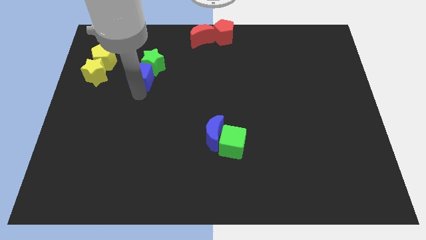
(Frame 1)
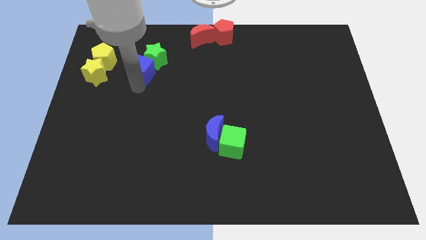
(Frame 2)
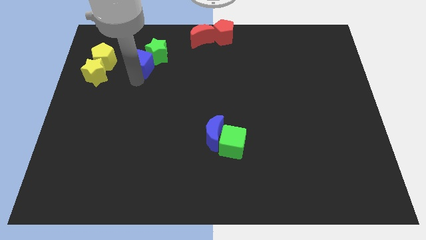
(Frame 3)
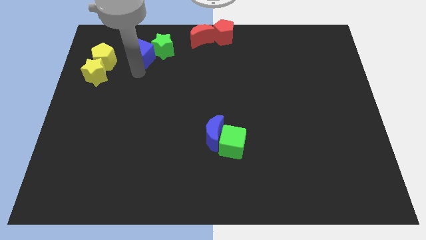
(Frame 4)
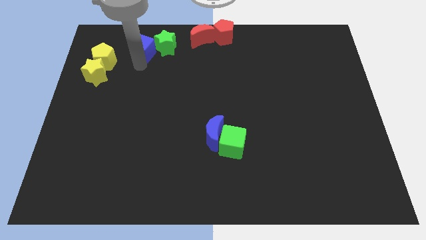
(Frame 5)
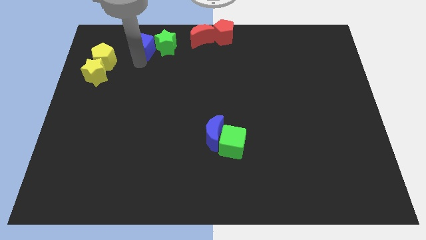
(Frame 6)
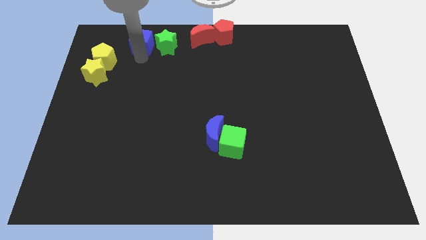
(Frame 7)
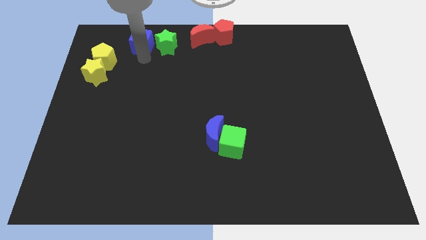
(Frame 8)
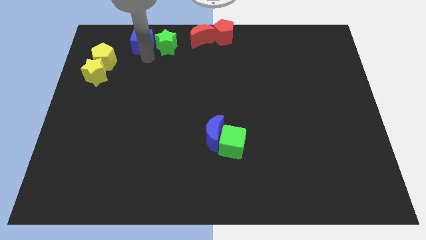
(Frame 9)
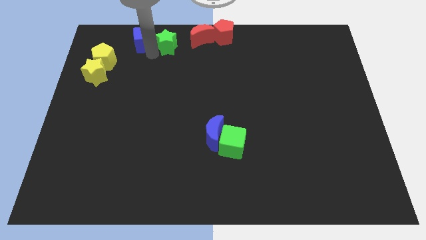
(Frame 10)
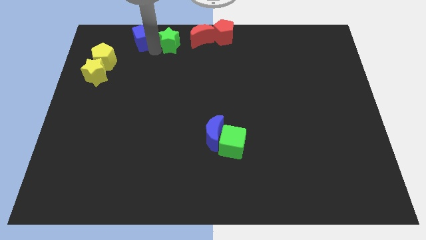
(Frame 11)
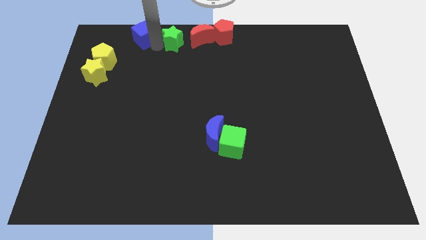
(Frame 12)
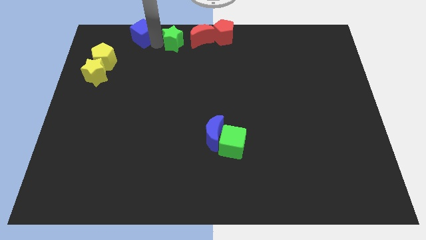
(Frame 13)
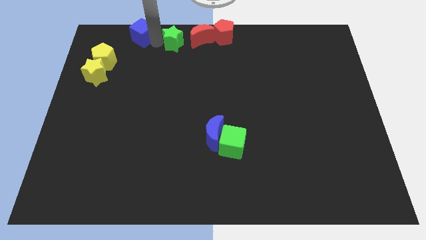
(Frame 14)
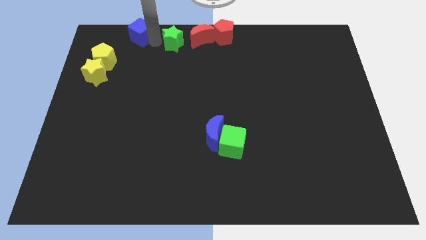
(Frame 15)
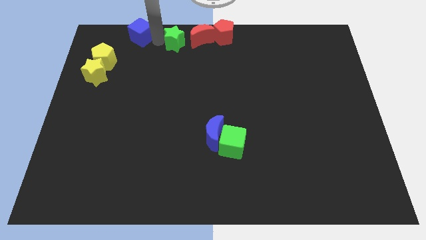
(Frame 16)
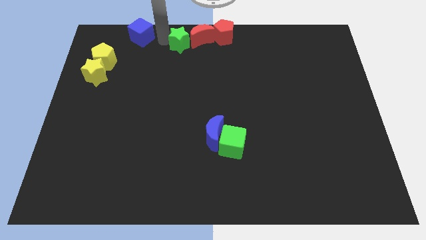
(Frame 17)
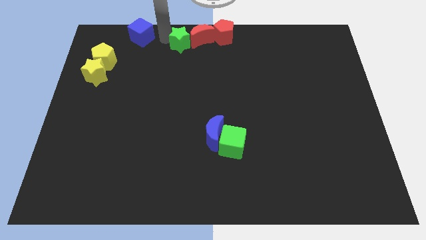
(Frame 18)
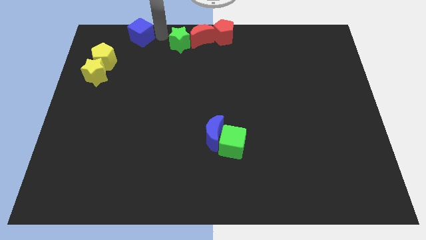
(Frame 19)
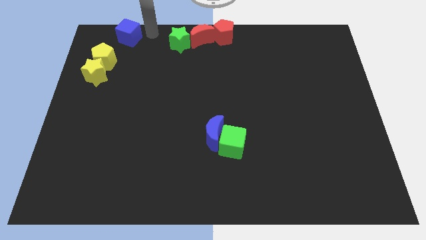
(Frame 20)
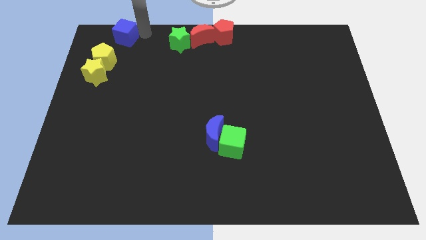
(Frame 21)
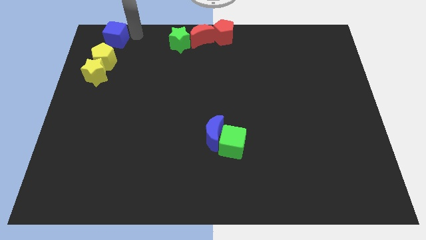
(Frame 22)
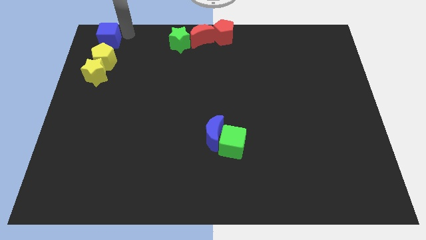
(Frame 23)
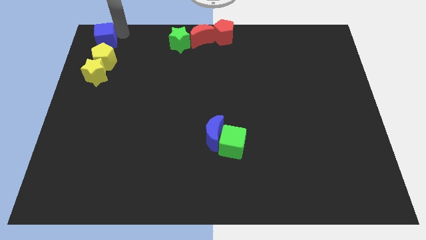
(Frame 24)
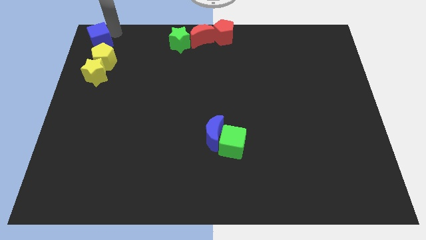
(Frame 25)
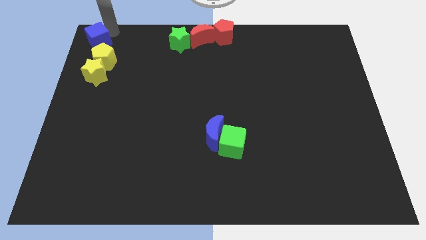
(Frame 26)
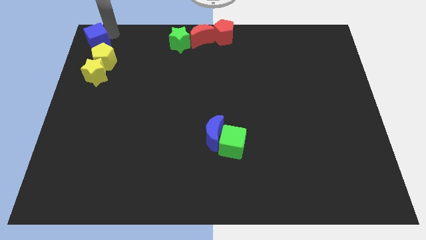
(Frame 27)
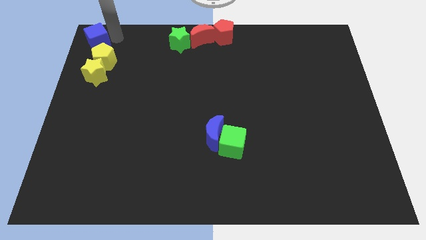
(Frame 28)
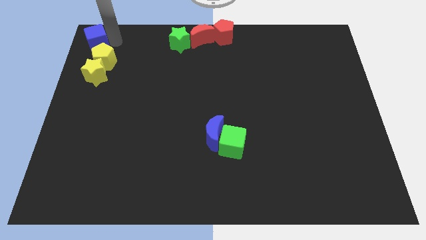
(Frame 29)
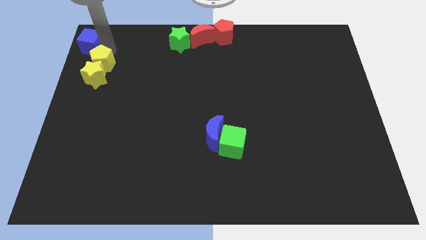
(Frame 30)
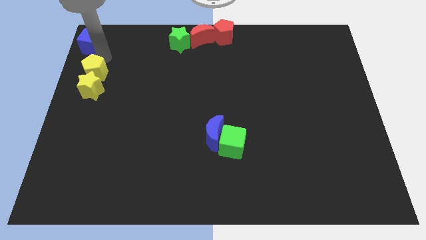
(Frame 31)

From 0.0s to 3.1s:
place the blue cube above the yellow pentagon

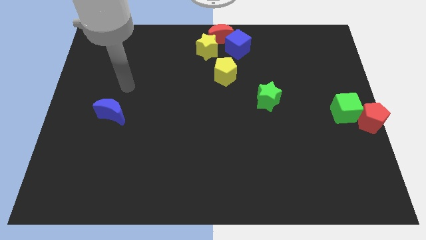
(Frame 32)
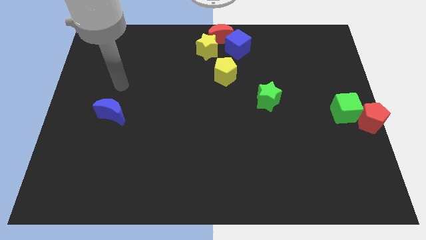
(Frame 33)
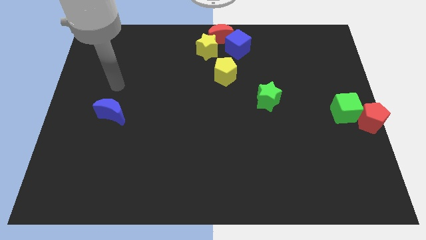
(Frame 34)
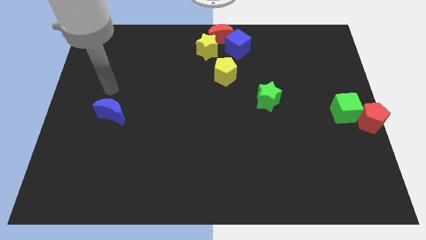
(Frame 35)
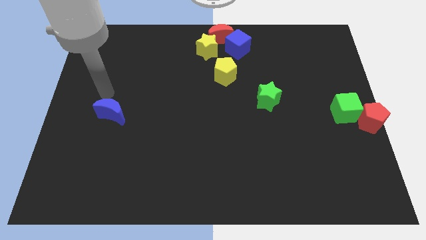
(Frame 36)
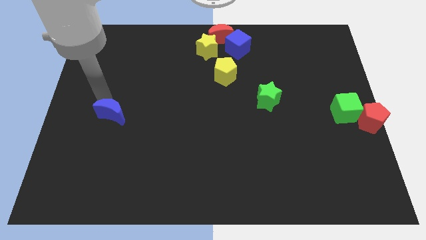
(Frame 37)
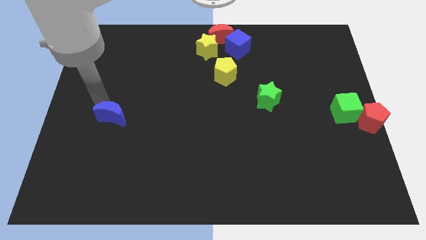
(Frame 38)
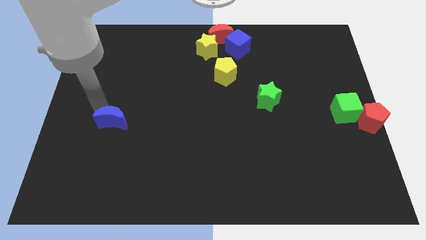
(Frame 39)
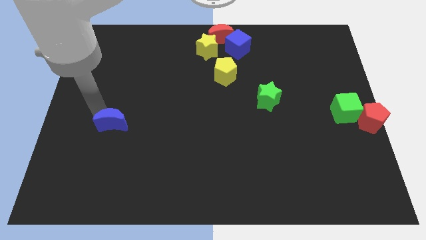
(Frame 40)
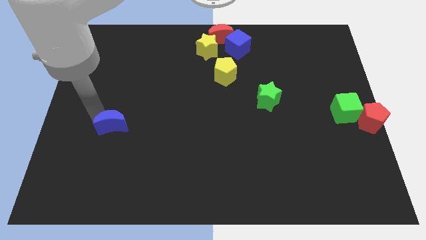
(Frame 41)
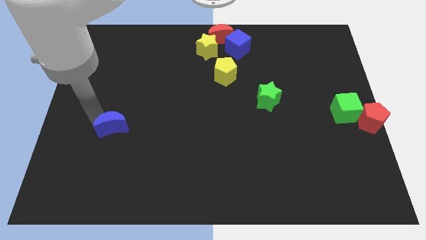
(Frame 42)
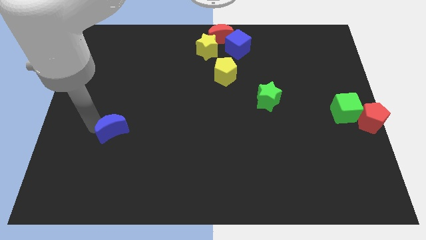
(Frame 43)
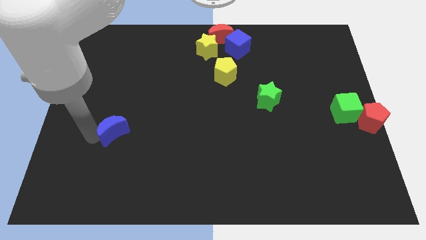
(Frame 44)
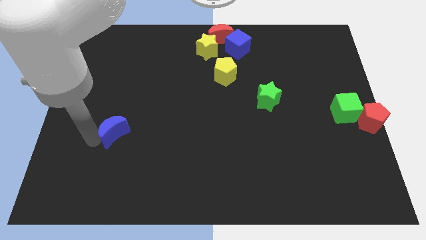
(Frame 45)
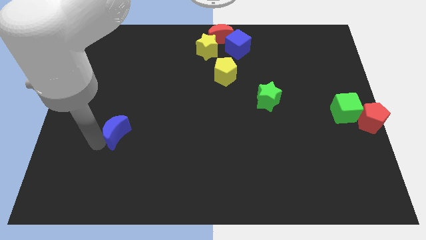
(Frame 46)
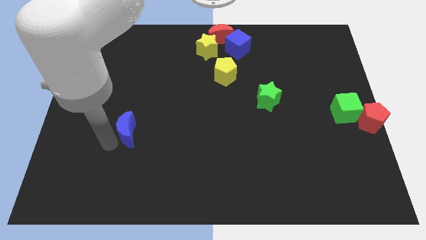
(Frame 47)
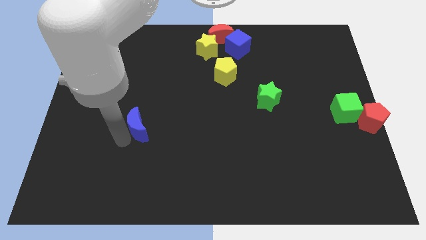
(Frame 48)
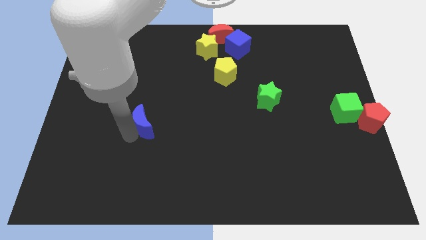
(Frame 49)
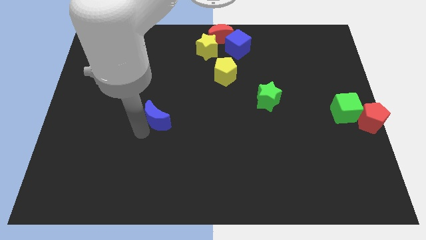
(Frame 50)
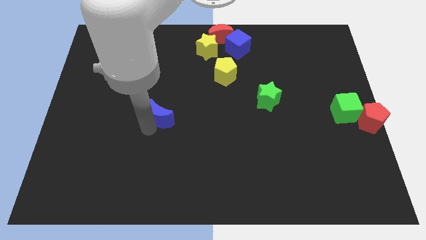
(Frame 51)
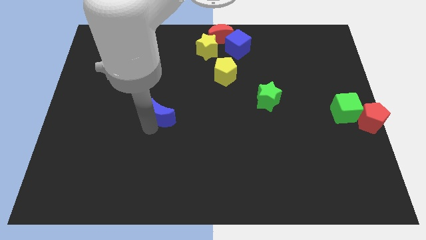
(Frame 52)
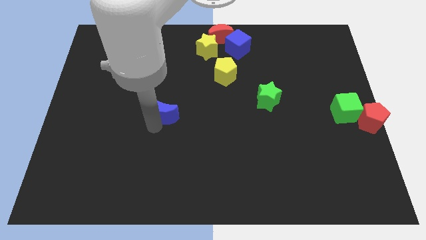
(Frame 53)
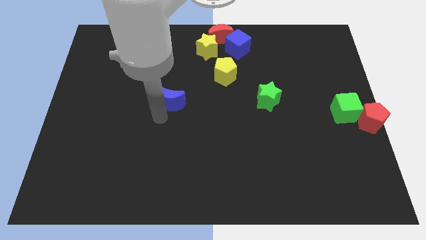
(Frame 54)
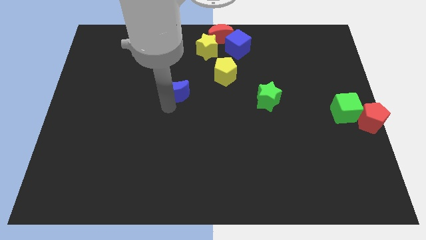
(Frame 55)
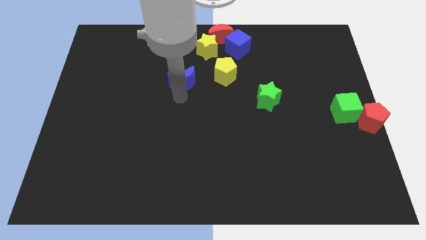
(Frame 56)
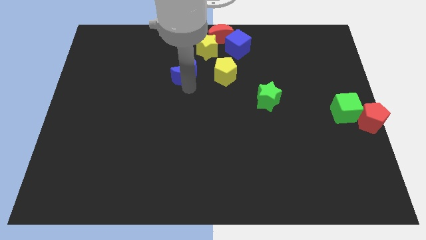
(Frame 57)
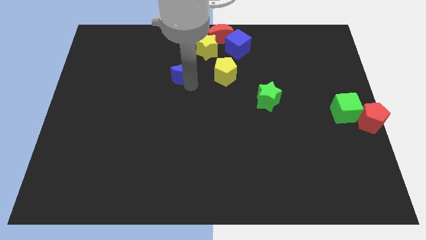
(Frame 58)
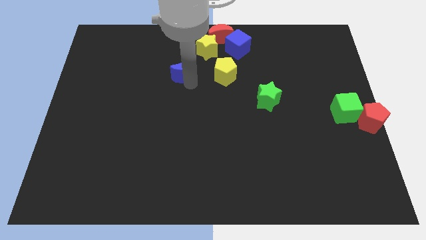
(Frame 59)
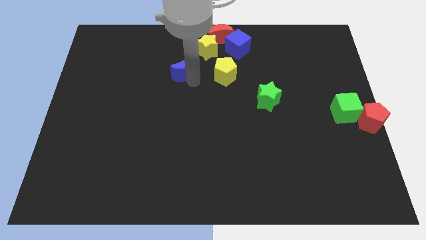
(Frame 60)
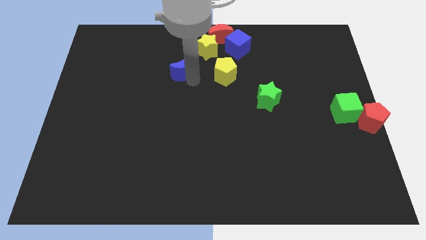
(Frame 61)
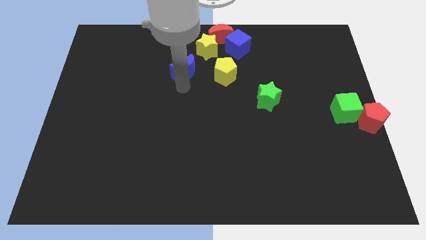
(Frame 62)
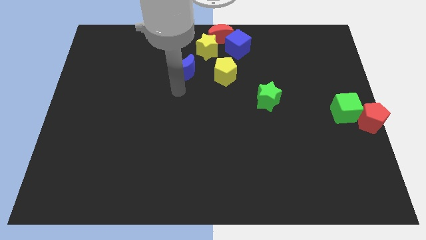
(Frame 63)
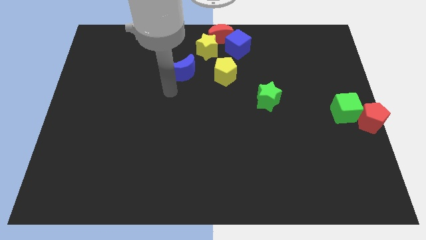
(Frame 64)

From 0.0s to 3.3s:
push the blue crescent bottom left to the yellow star

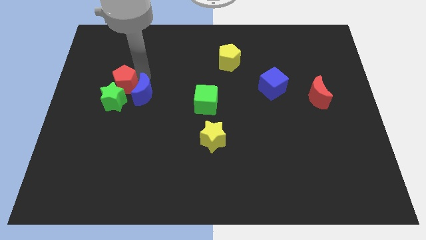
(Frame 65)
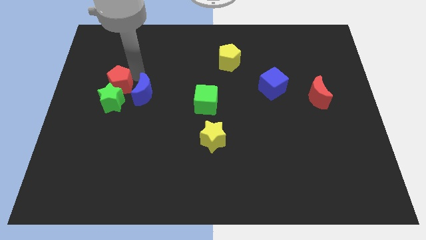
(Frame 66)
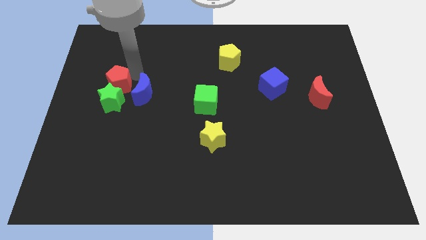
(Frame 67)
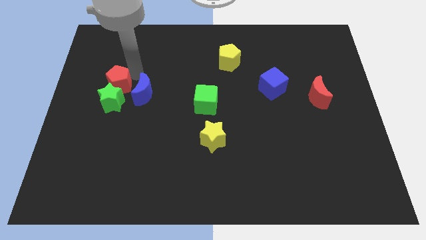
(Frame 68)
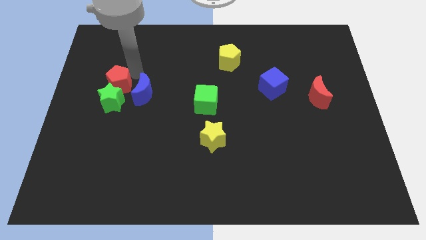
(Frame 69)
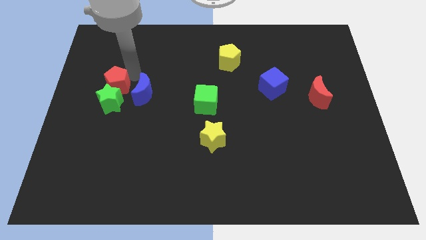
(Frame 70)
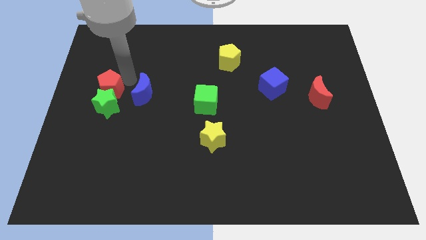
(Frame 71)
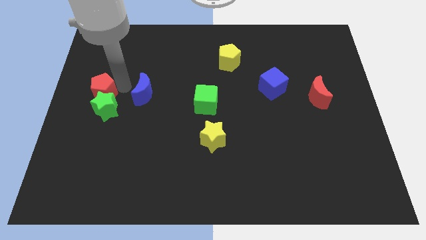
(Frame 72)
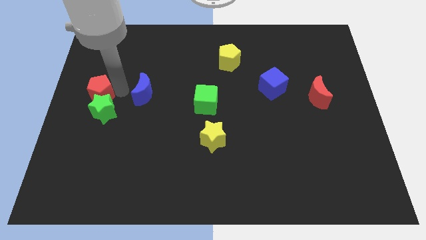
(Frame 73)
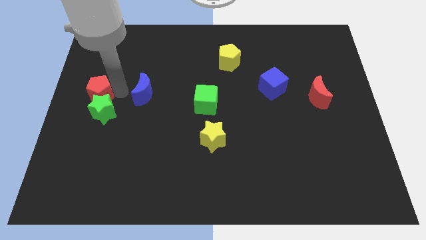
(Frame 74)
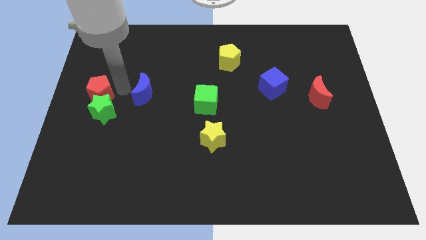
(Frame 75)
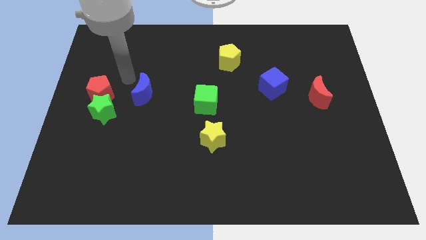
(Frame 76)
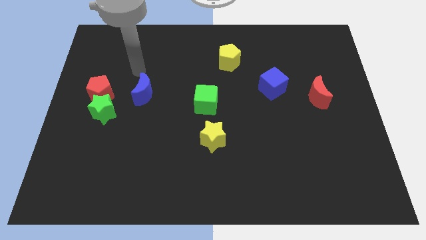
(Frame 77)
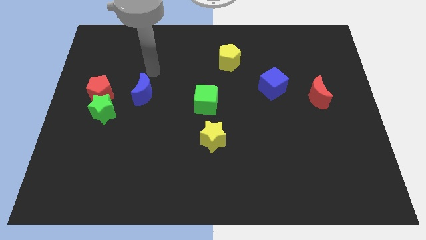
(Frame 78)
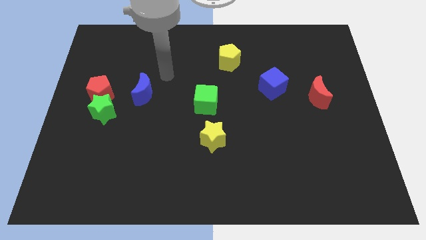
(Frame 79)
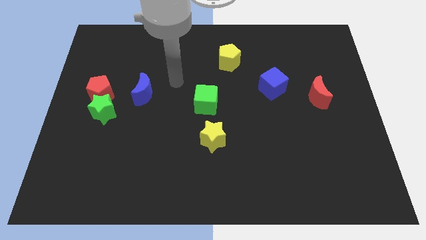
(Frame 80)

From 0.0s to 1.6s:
push the red pentagon into the green star

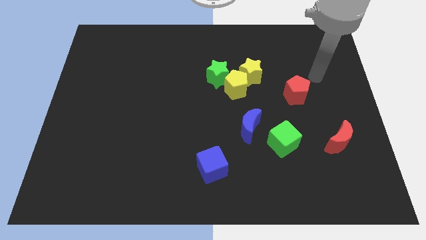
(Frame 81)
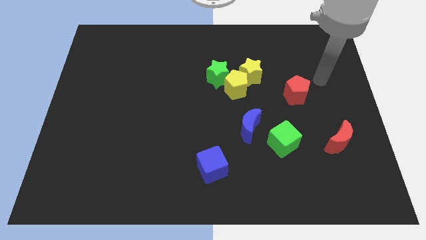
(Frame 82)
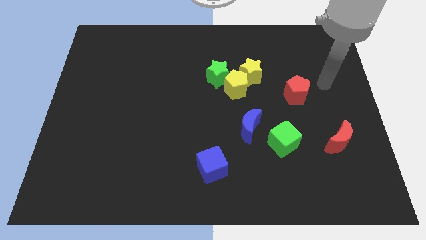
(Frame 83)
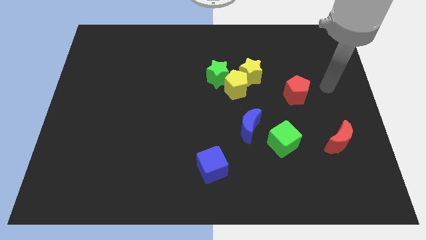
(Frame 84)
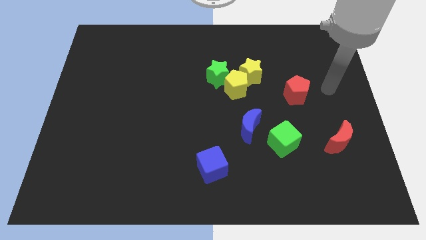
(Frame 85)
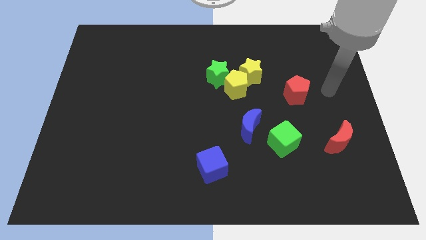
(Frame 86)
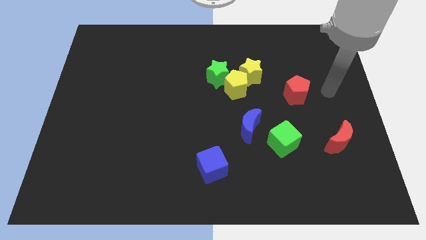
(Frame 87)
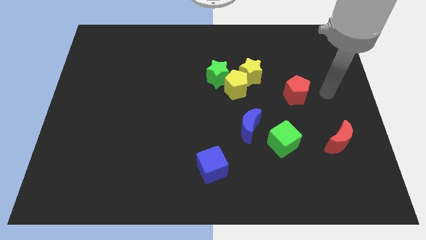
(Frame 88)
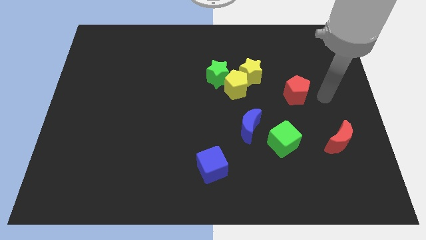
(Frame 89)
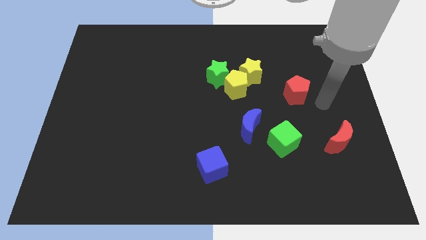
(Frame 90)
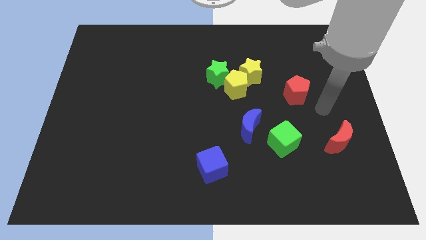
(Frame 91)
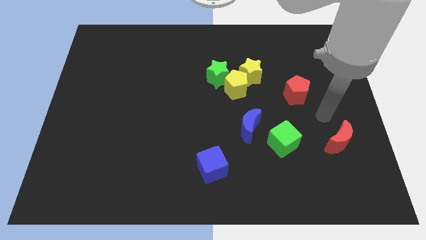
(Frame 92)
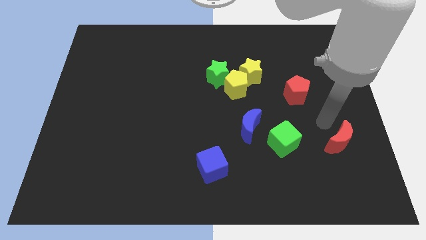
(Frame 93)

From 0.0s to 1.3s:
put your hand in between the red pentagon and red crescent
